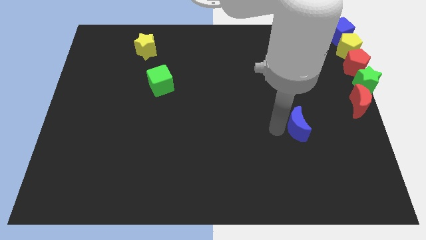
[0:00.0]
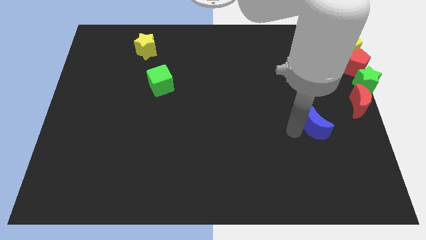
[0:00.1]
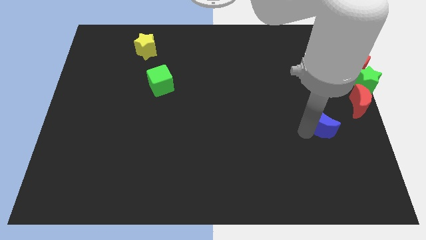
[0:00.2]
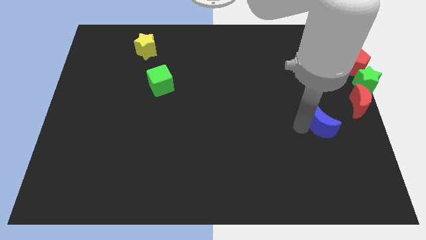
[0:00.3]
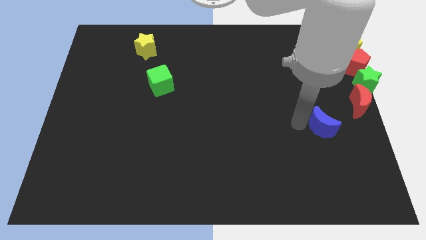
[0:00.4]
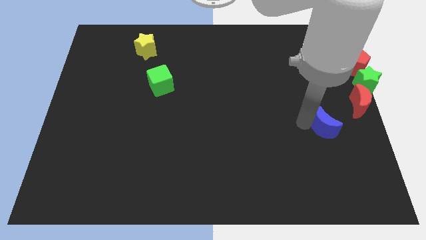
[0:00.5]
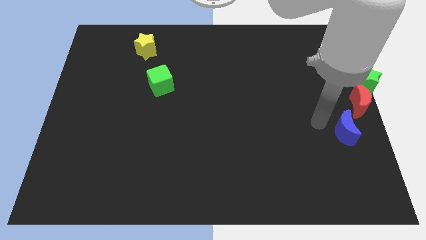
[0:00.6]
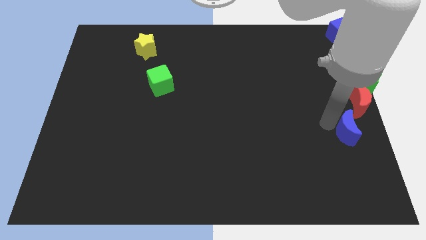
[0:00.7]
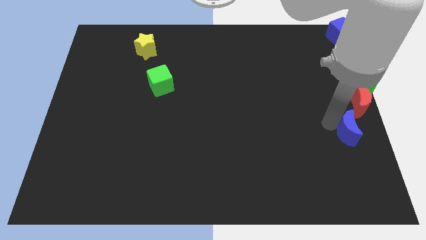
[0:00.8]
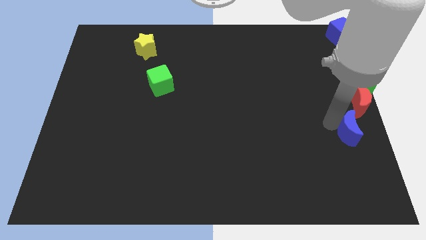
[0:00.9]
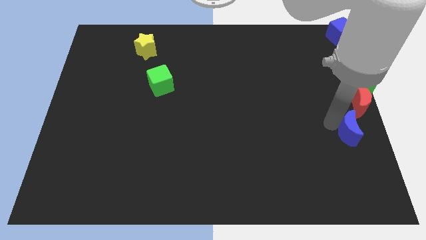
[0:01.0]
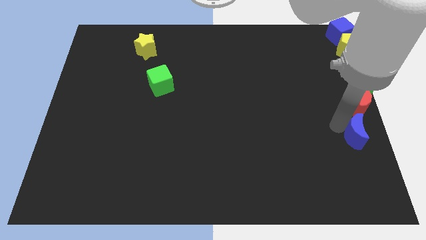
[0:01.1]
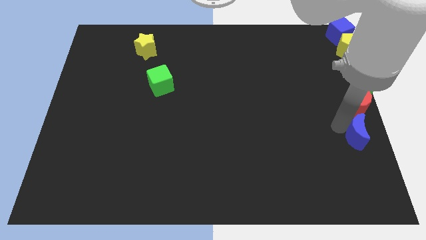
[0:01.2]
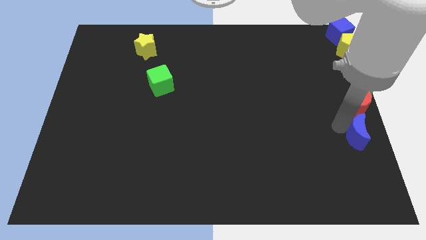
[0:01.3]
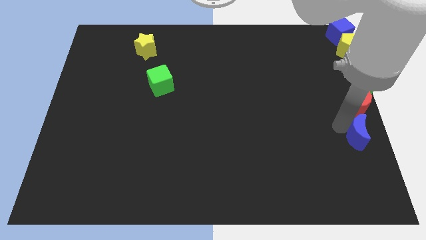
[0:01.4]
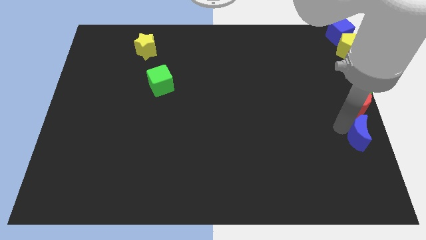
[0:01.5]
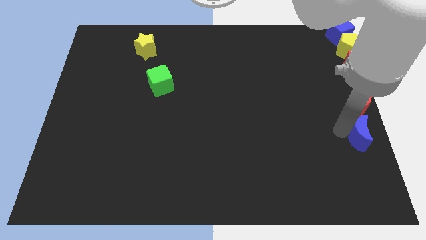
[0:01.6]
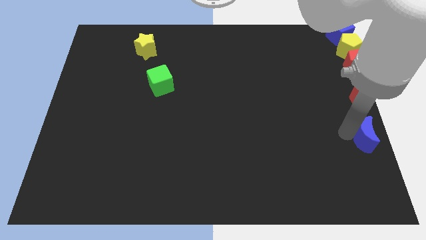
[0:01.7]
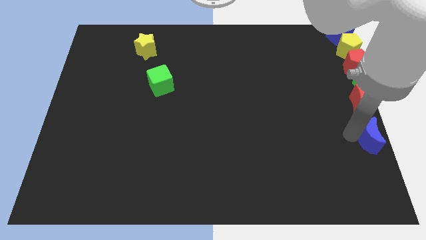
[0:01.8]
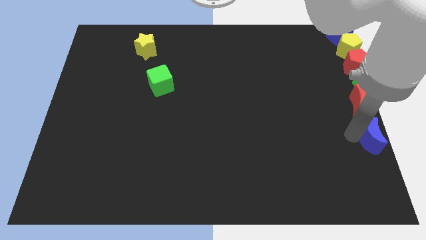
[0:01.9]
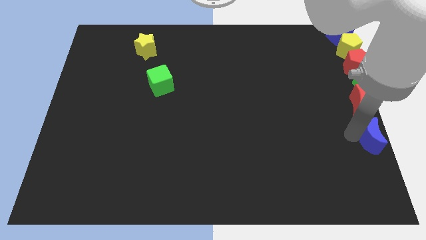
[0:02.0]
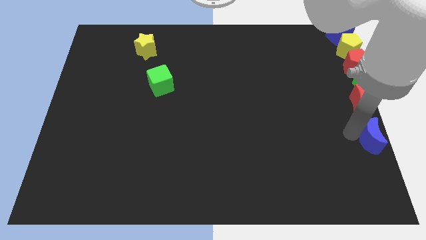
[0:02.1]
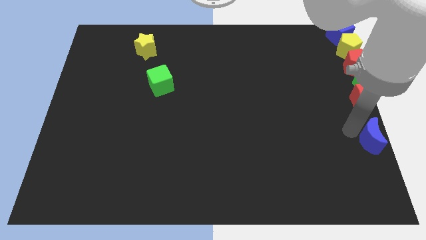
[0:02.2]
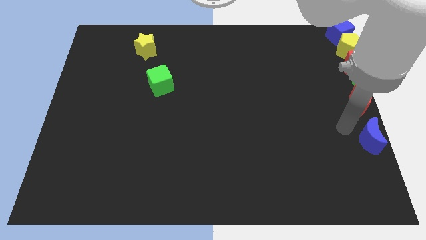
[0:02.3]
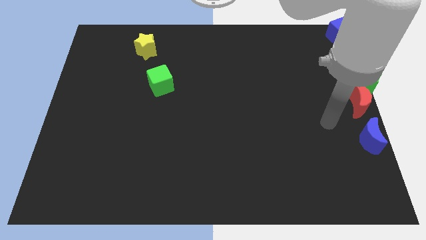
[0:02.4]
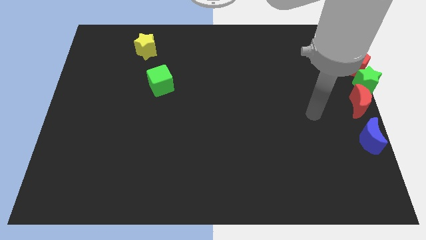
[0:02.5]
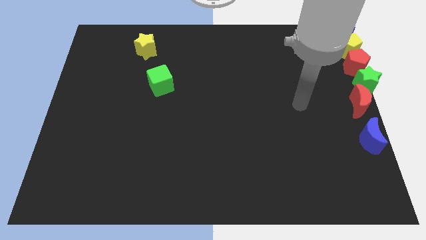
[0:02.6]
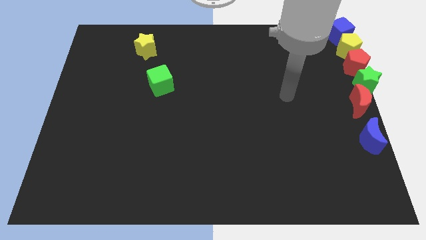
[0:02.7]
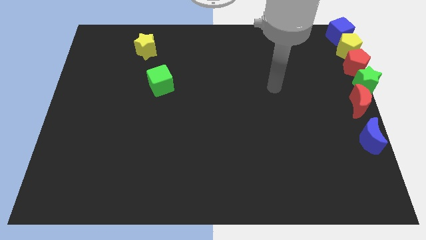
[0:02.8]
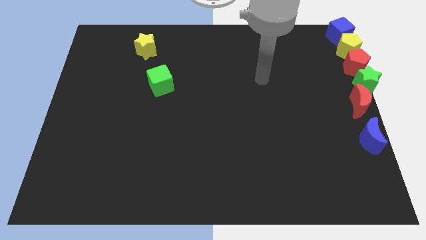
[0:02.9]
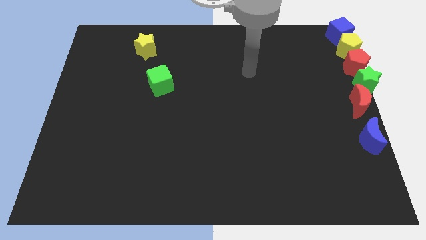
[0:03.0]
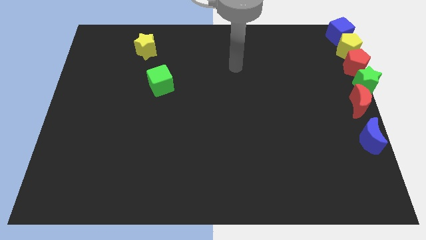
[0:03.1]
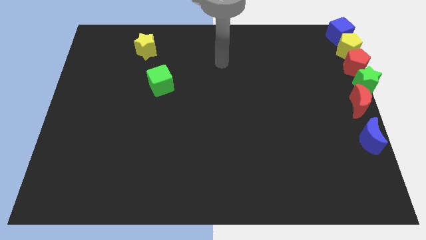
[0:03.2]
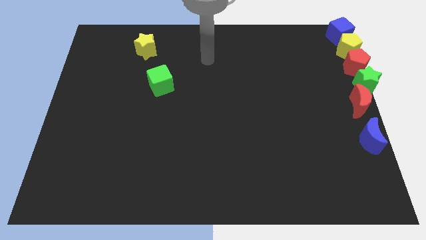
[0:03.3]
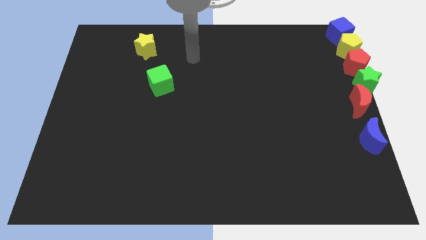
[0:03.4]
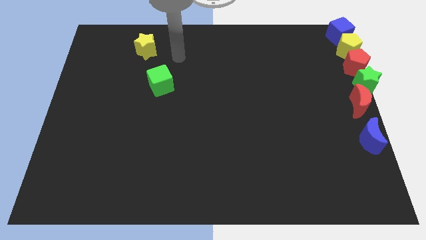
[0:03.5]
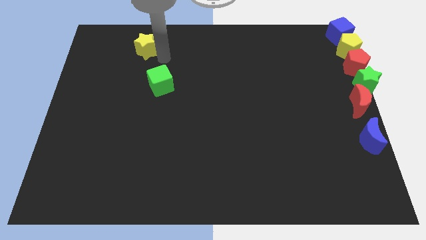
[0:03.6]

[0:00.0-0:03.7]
put the blue crescent below the red crescent

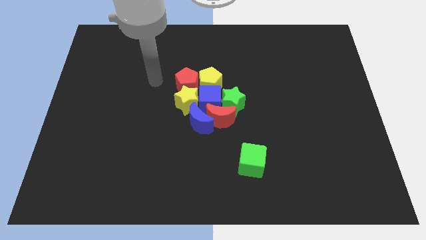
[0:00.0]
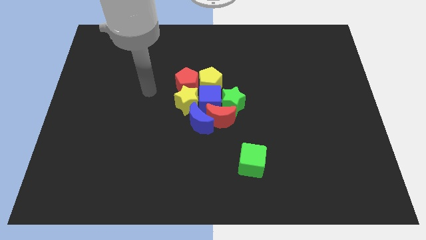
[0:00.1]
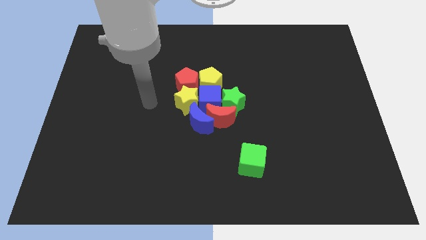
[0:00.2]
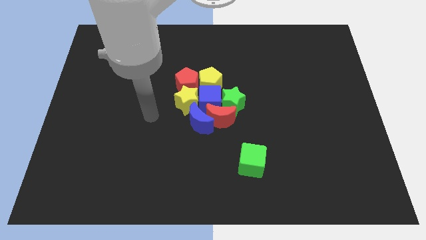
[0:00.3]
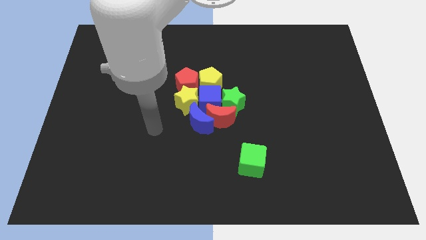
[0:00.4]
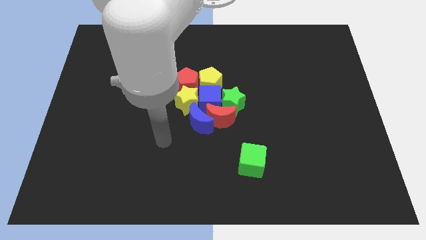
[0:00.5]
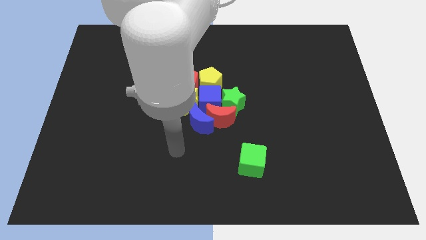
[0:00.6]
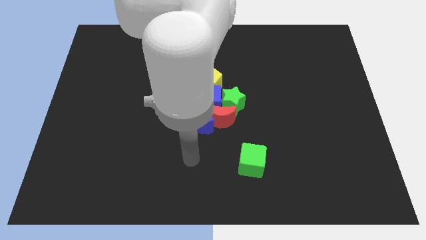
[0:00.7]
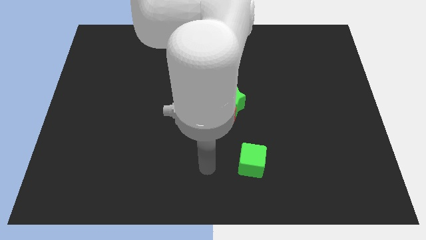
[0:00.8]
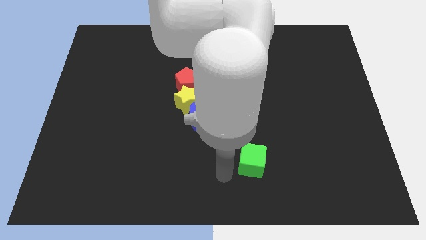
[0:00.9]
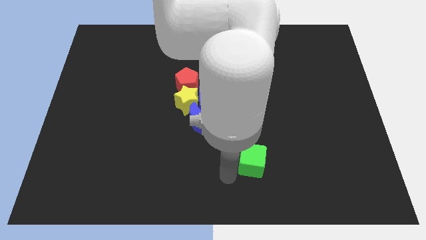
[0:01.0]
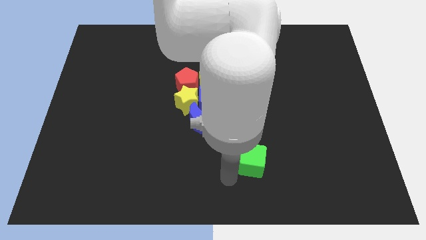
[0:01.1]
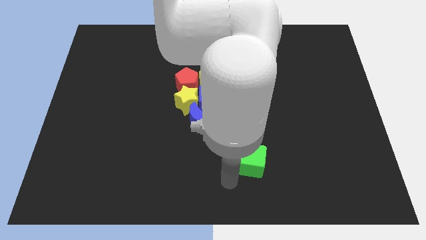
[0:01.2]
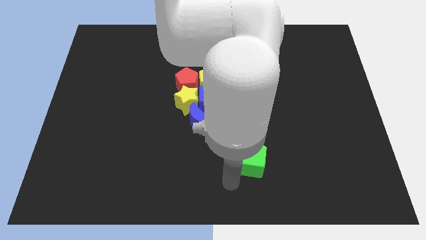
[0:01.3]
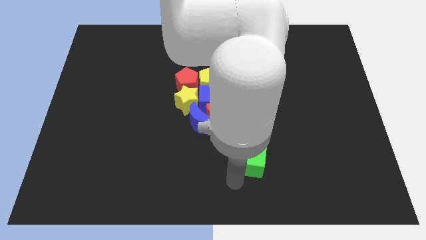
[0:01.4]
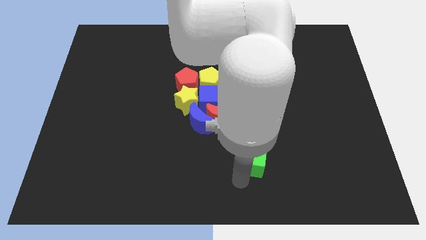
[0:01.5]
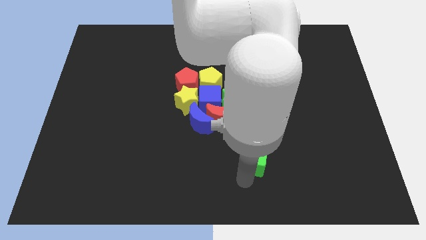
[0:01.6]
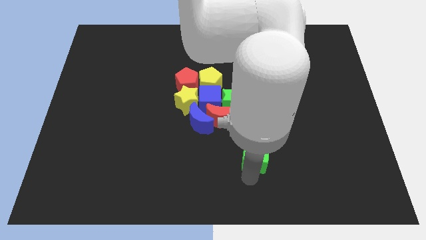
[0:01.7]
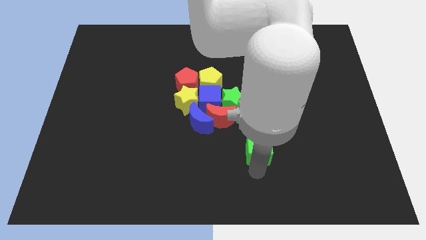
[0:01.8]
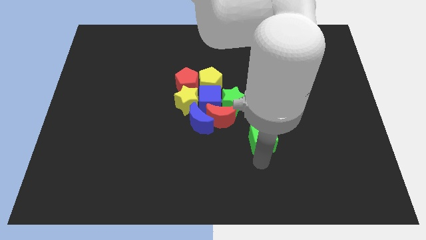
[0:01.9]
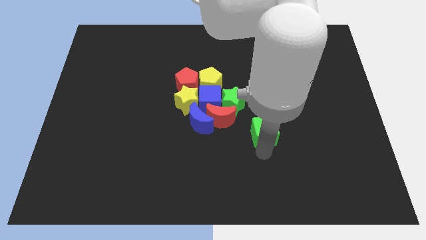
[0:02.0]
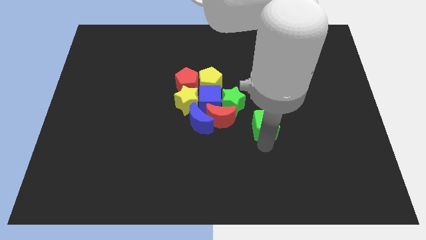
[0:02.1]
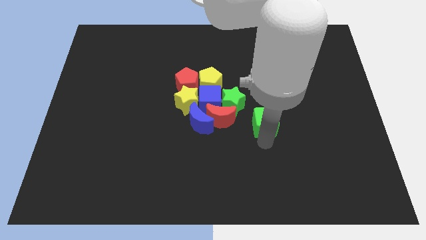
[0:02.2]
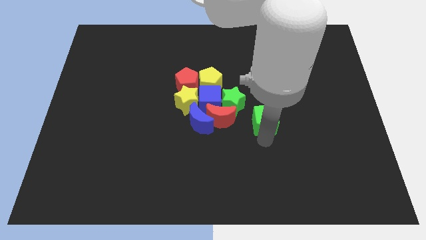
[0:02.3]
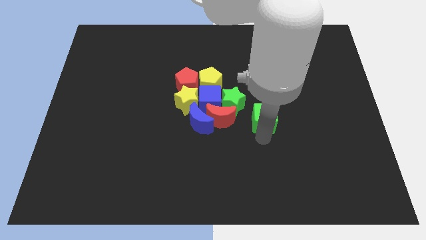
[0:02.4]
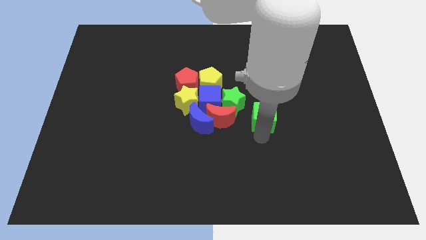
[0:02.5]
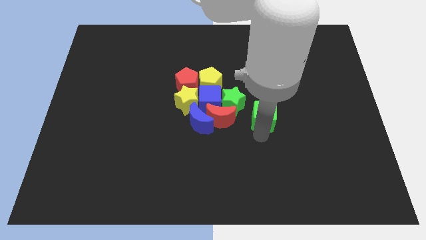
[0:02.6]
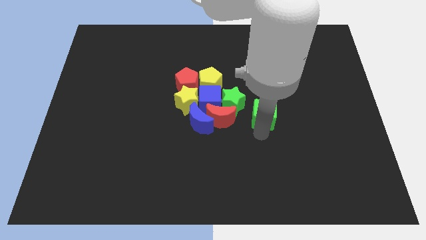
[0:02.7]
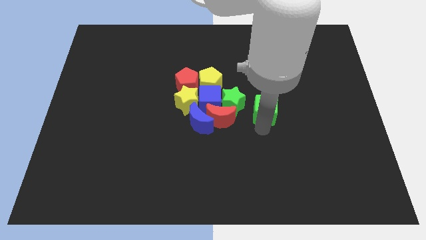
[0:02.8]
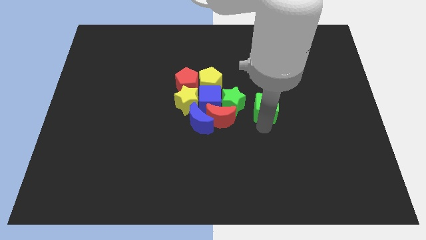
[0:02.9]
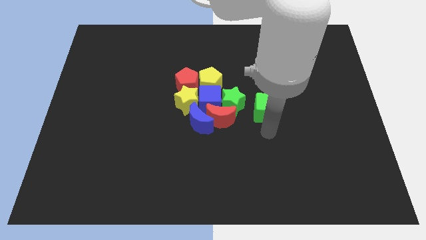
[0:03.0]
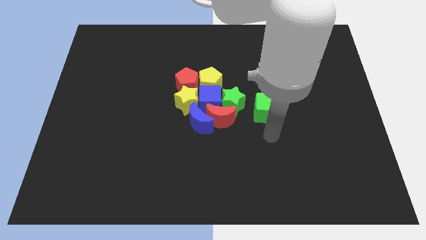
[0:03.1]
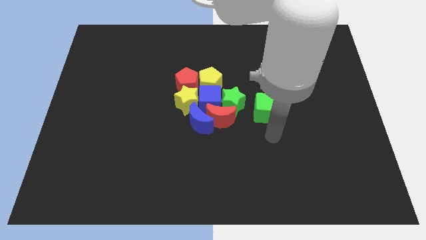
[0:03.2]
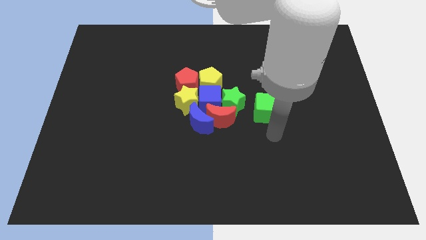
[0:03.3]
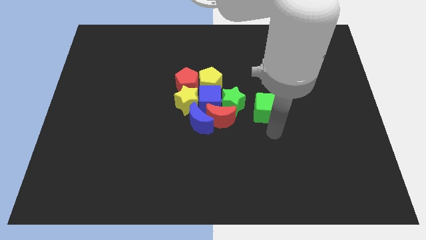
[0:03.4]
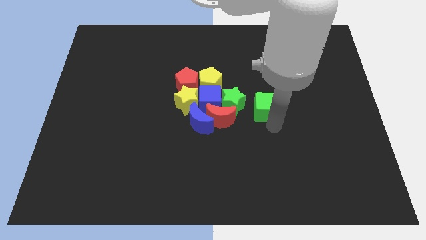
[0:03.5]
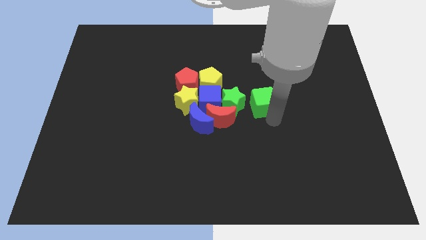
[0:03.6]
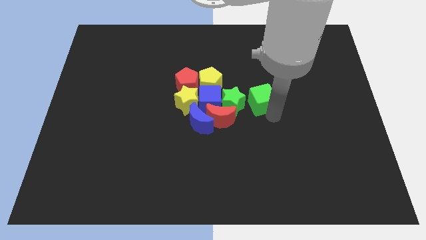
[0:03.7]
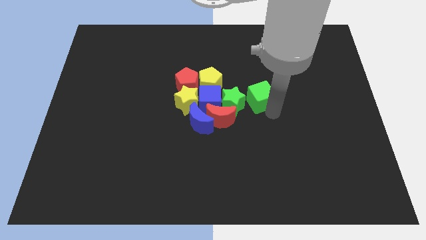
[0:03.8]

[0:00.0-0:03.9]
move the green cube to the right side of the green star

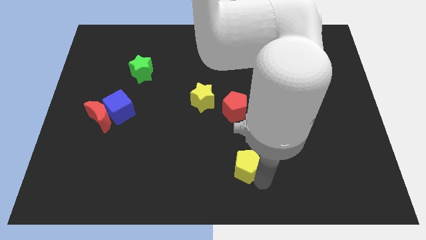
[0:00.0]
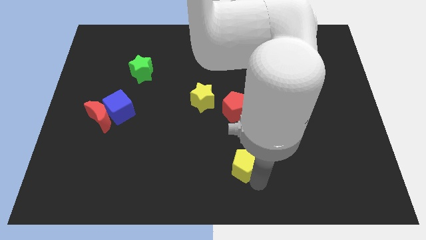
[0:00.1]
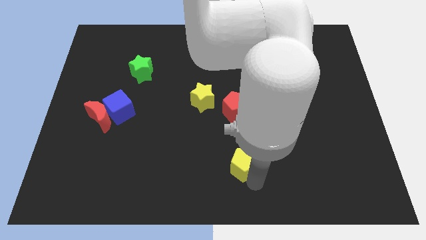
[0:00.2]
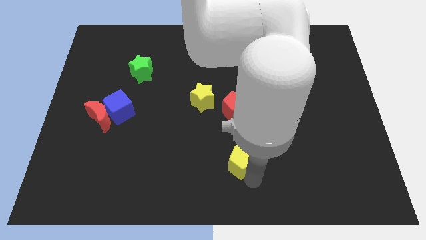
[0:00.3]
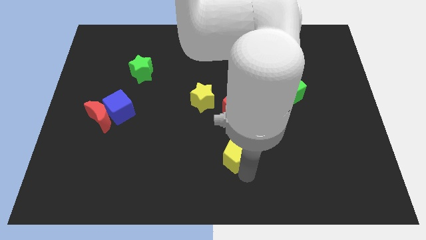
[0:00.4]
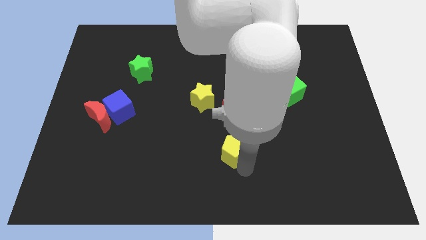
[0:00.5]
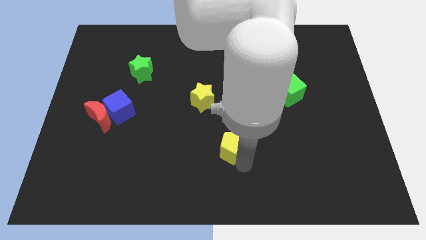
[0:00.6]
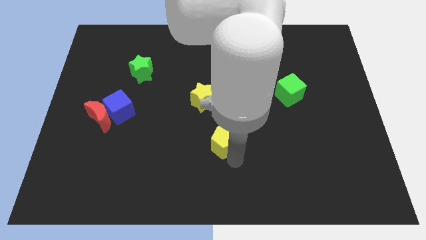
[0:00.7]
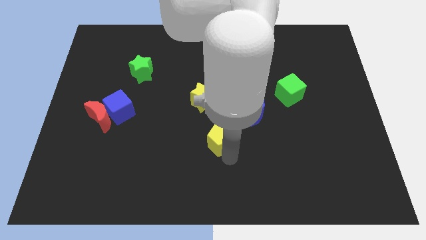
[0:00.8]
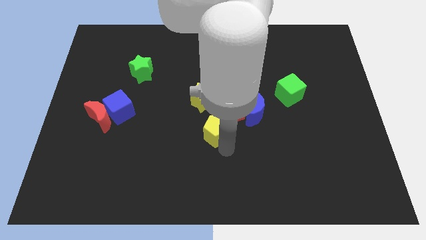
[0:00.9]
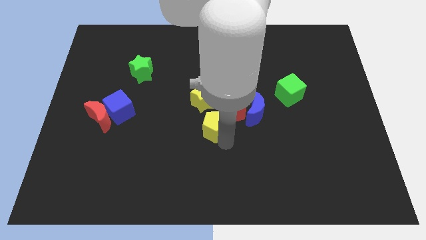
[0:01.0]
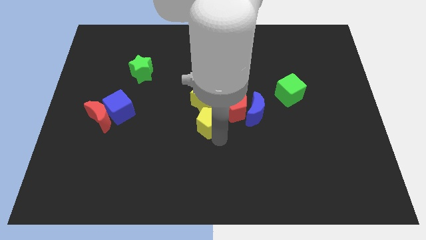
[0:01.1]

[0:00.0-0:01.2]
push the yellow pentagon close to the yellow star

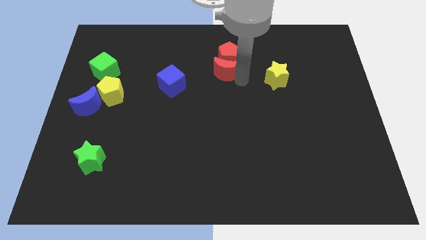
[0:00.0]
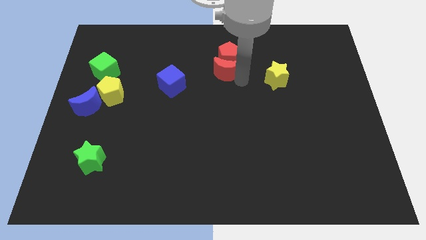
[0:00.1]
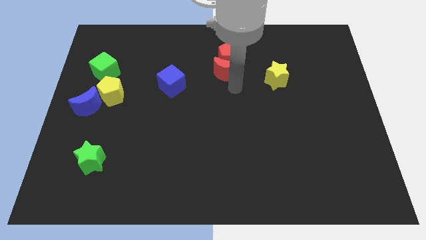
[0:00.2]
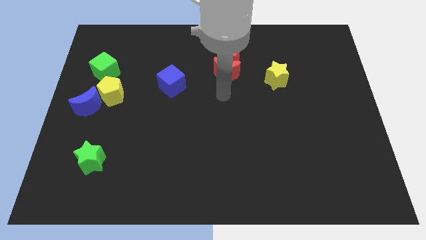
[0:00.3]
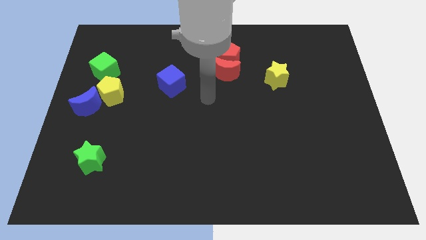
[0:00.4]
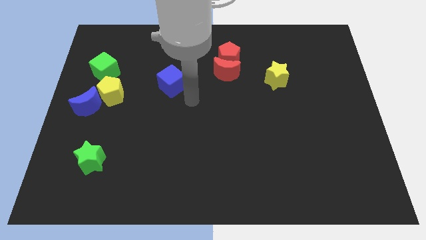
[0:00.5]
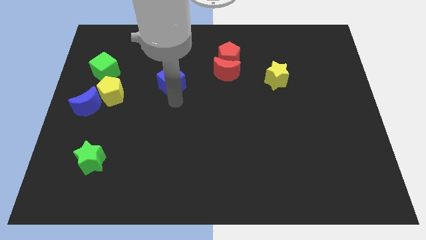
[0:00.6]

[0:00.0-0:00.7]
point your arm at the bottom of blue cube
